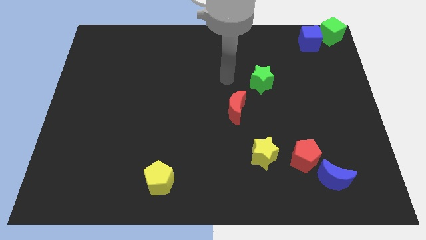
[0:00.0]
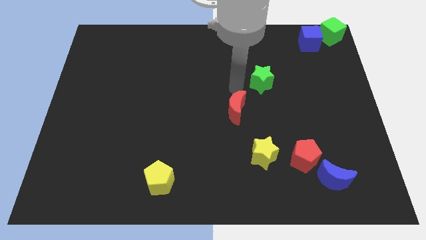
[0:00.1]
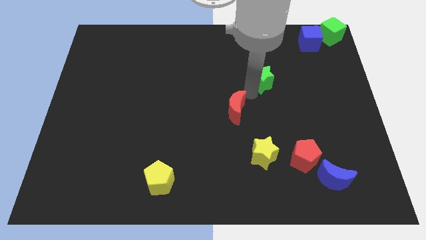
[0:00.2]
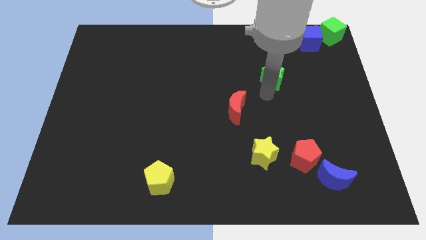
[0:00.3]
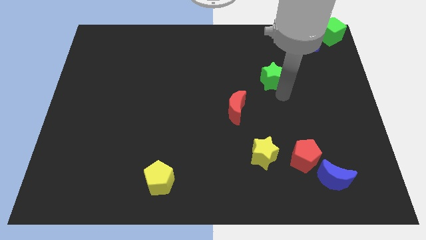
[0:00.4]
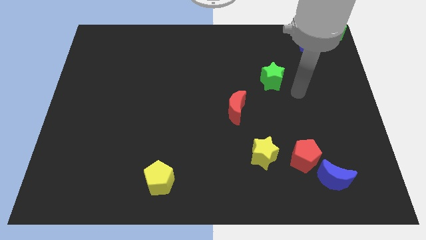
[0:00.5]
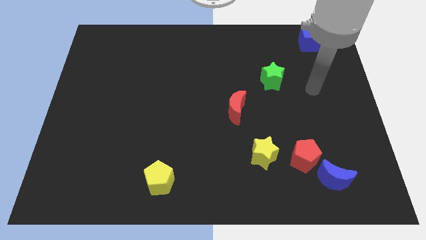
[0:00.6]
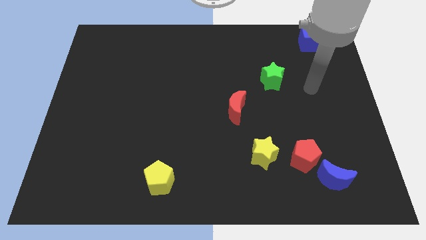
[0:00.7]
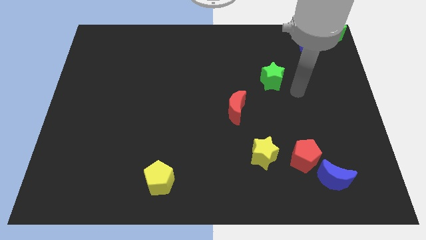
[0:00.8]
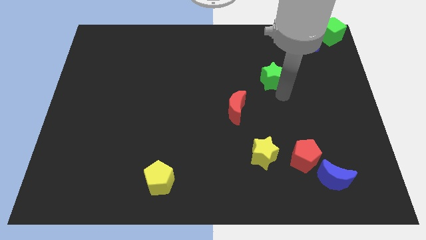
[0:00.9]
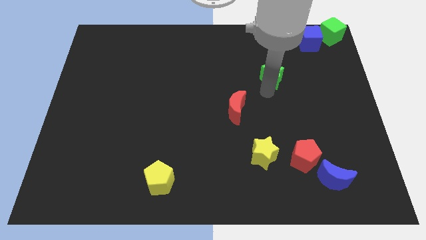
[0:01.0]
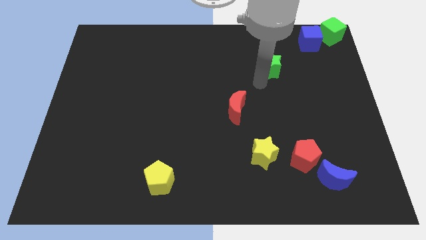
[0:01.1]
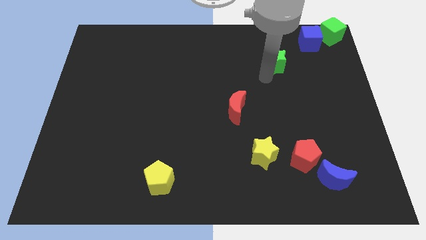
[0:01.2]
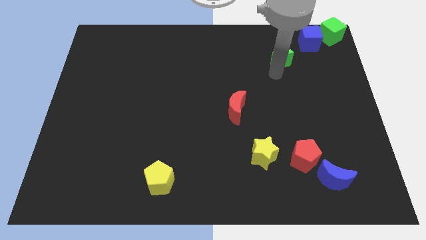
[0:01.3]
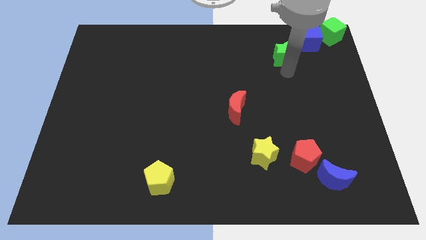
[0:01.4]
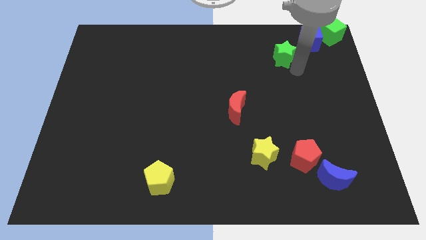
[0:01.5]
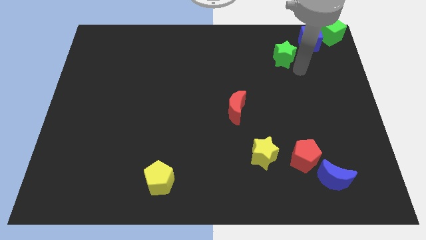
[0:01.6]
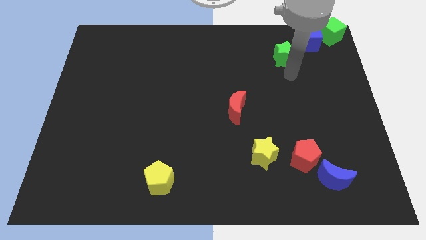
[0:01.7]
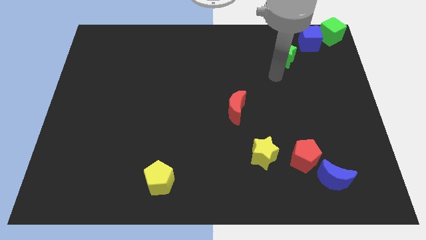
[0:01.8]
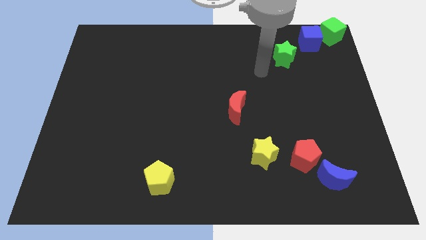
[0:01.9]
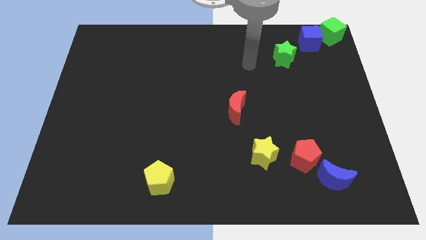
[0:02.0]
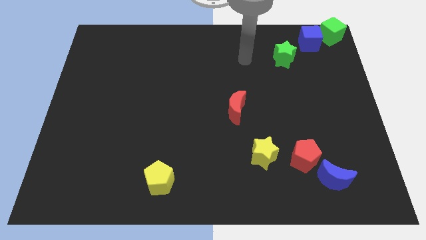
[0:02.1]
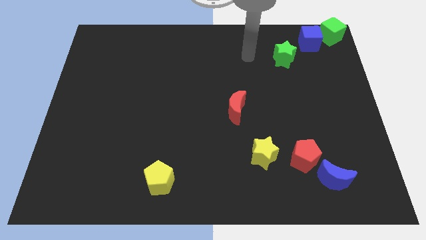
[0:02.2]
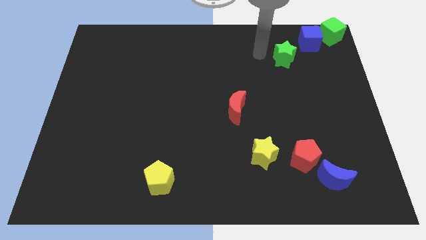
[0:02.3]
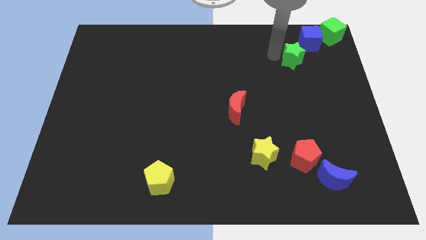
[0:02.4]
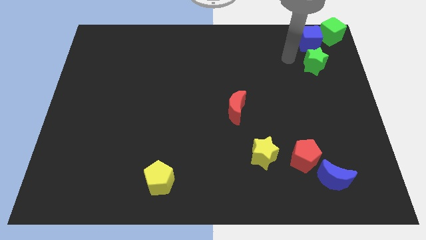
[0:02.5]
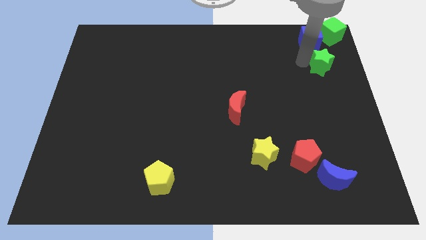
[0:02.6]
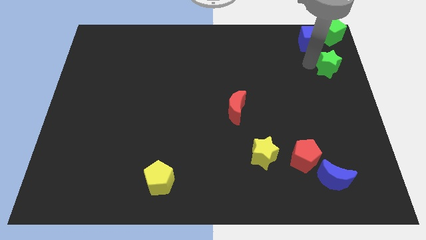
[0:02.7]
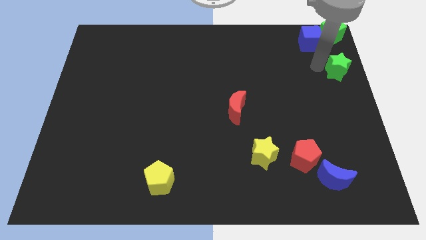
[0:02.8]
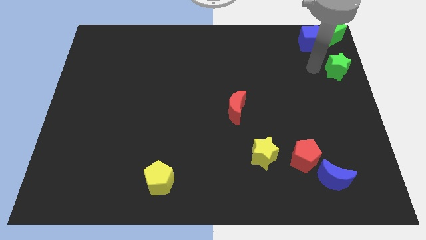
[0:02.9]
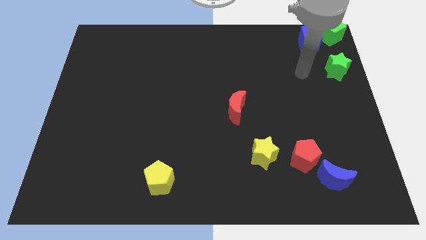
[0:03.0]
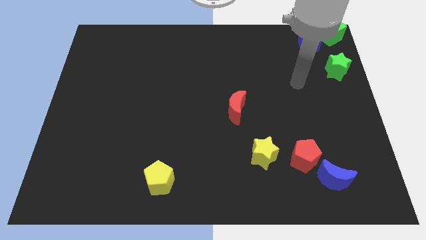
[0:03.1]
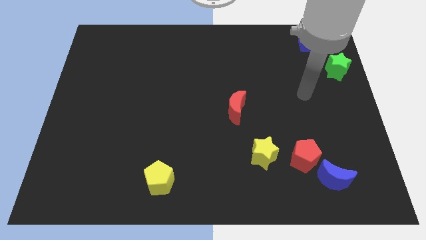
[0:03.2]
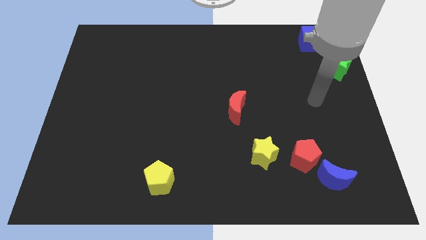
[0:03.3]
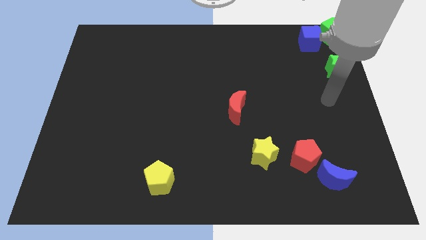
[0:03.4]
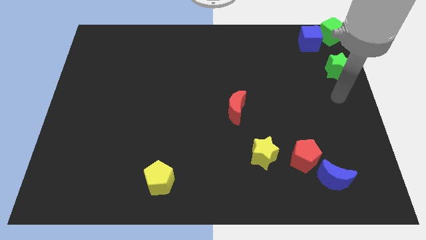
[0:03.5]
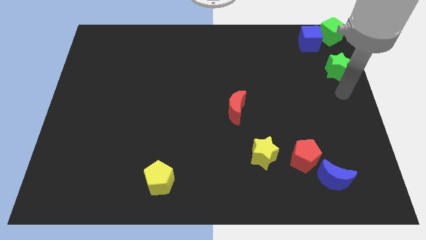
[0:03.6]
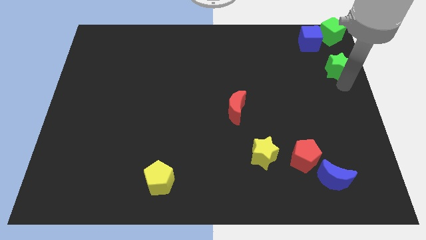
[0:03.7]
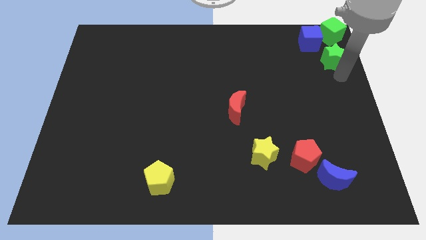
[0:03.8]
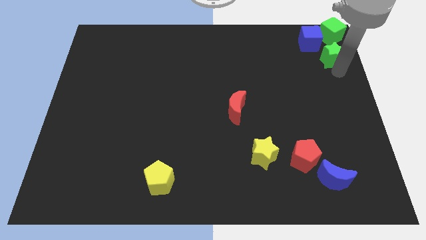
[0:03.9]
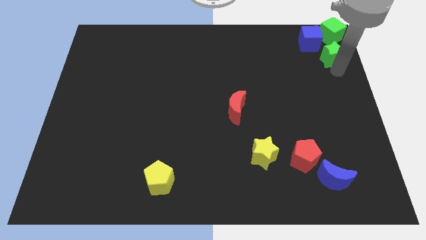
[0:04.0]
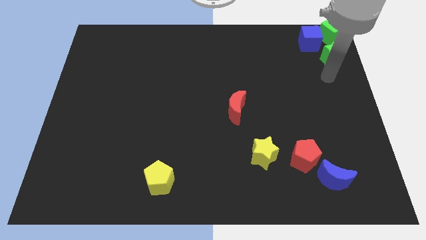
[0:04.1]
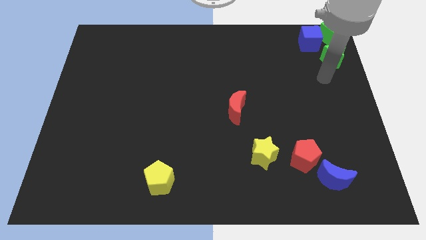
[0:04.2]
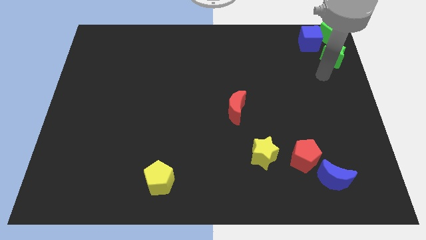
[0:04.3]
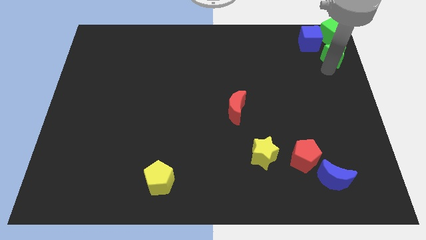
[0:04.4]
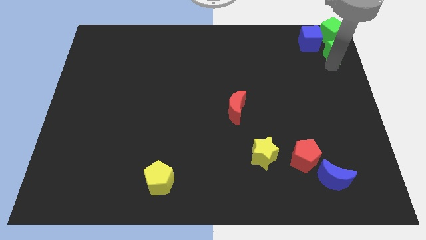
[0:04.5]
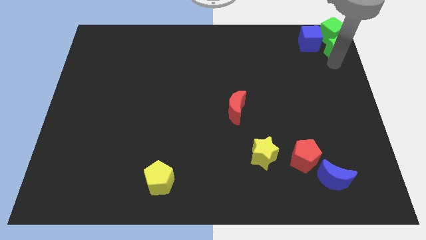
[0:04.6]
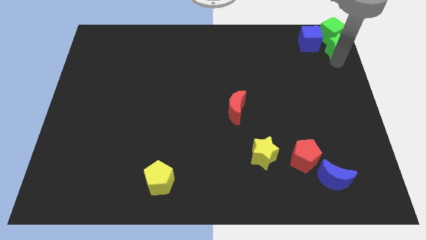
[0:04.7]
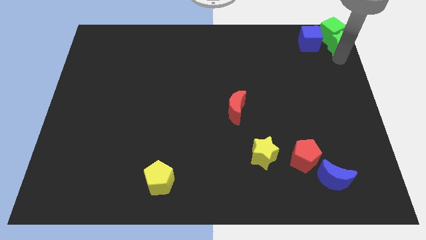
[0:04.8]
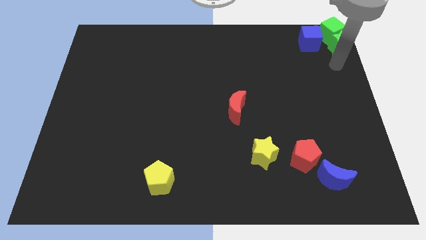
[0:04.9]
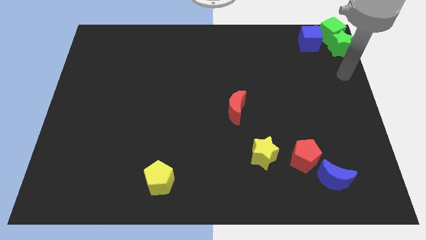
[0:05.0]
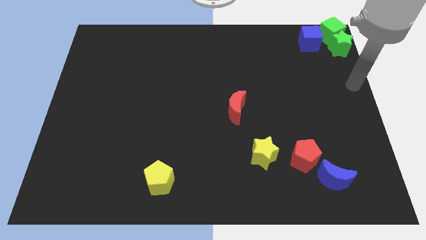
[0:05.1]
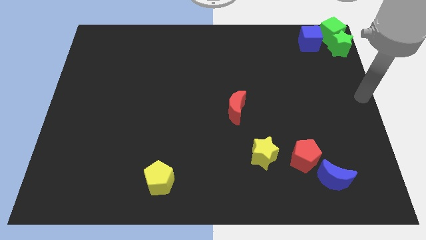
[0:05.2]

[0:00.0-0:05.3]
move the green star to the bottom of the green cube

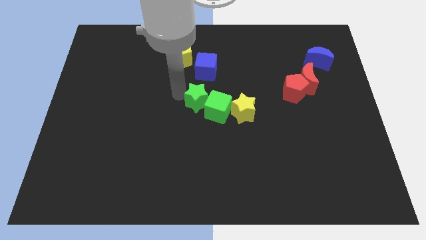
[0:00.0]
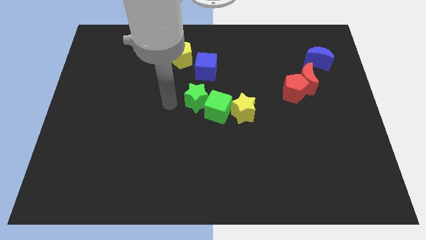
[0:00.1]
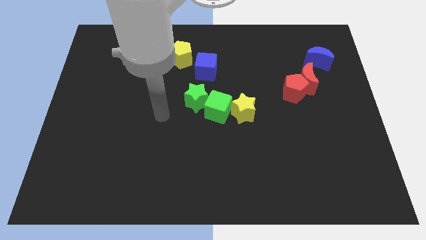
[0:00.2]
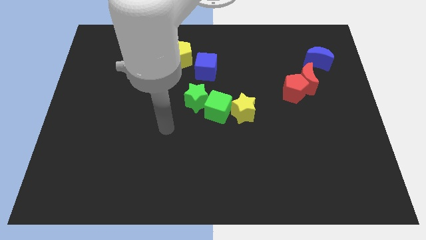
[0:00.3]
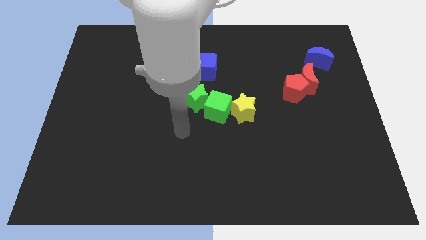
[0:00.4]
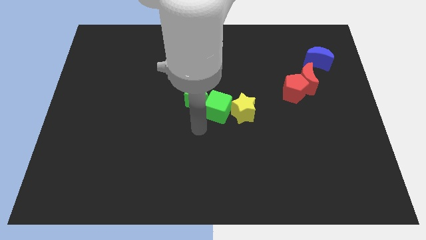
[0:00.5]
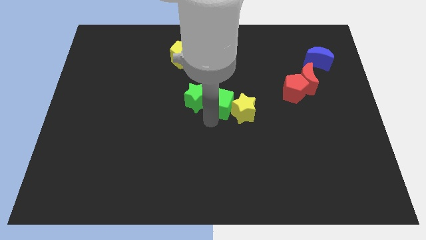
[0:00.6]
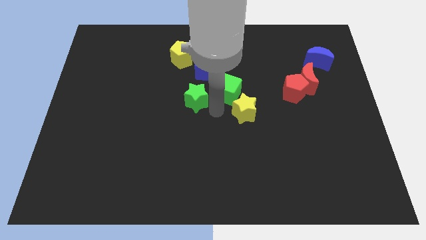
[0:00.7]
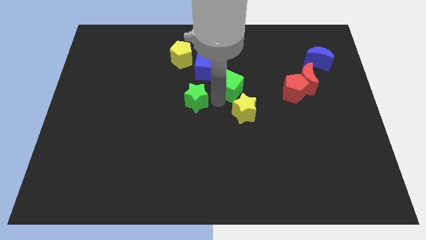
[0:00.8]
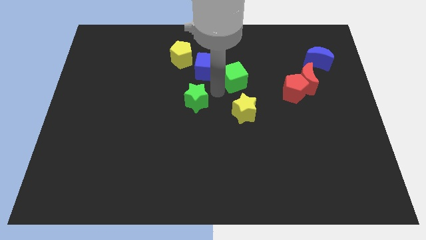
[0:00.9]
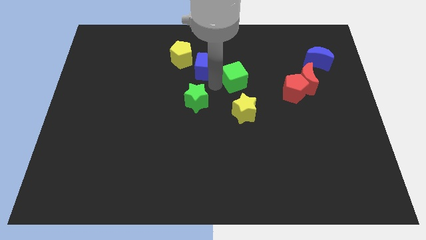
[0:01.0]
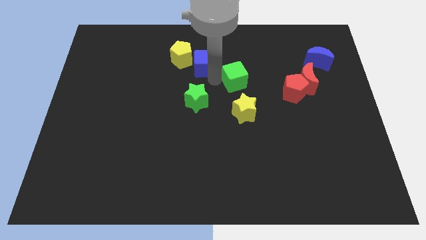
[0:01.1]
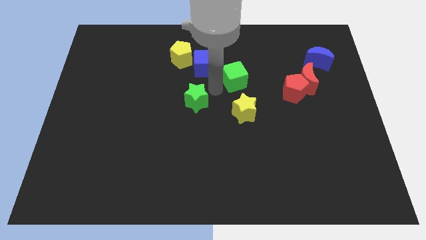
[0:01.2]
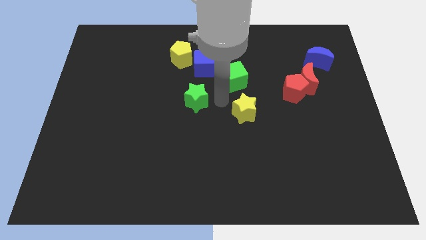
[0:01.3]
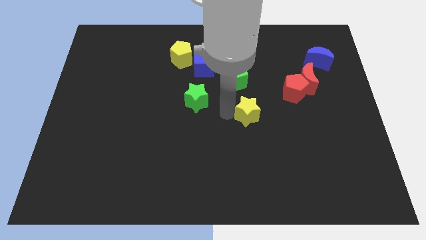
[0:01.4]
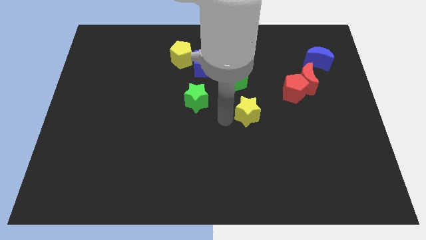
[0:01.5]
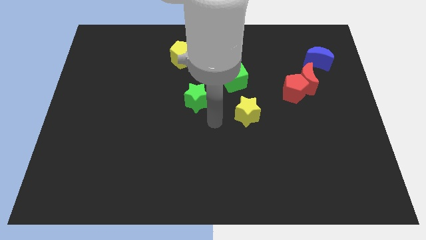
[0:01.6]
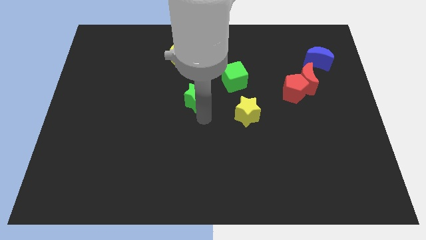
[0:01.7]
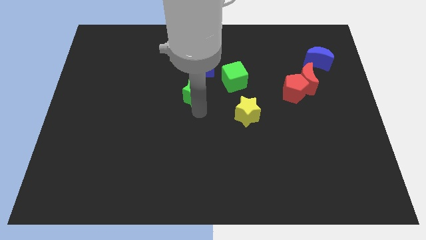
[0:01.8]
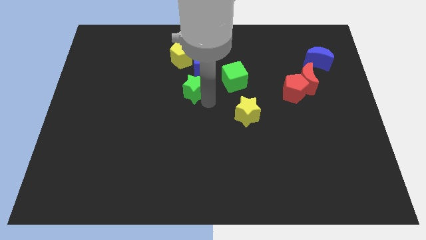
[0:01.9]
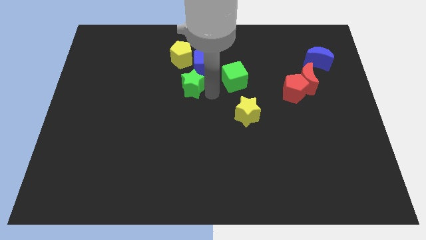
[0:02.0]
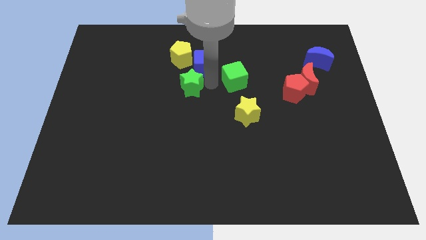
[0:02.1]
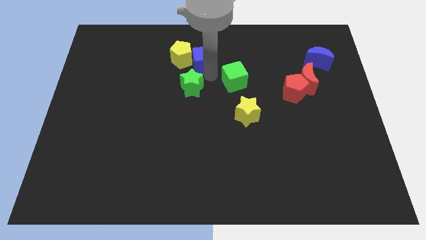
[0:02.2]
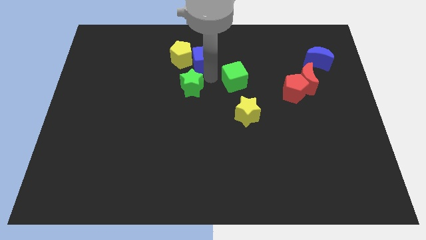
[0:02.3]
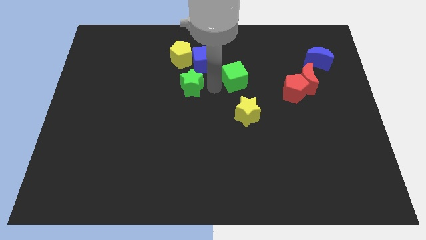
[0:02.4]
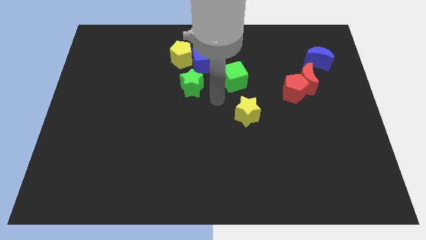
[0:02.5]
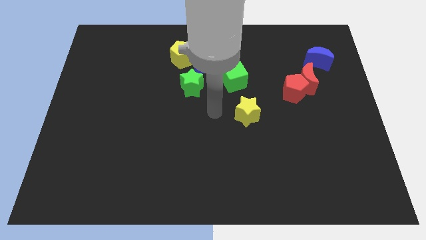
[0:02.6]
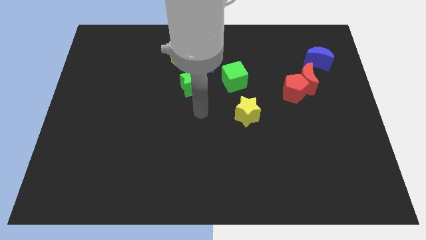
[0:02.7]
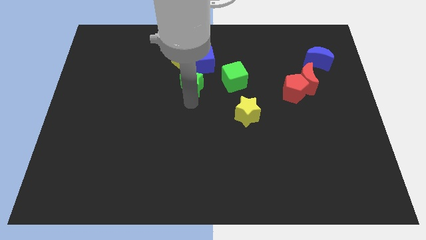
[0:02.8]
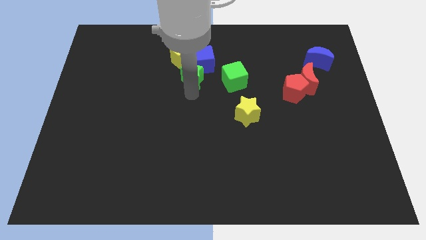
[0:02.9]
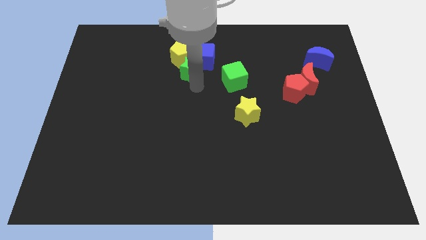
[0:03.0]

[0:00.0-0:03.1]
separate yellow star and green blocks at the center

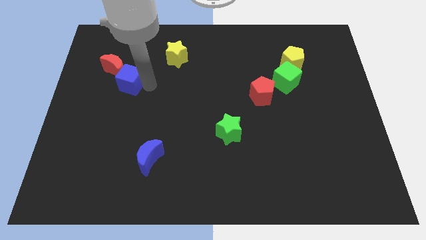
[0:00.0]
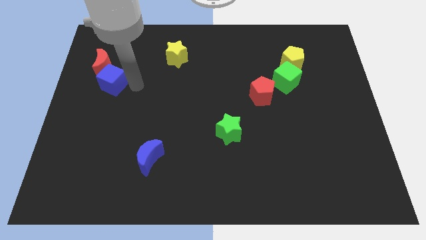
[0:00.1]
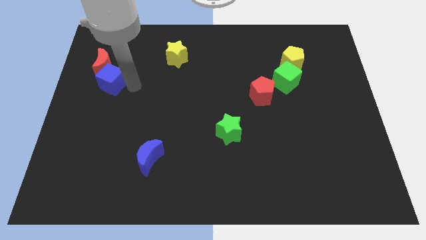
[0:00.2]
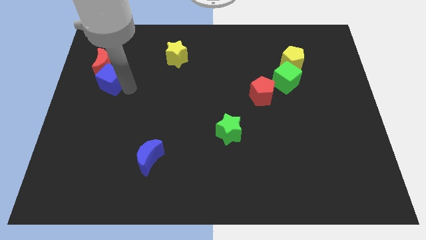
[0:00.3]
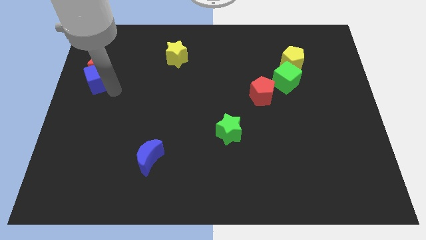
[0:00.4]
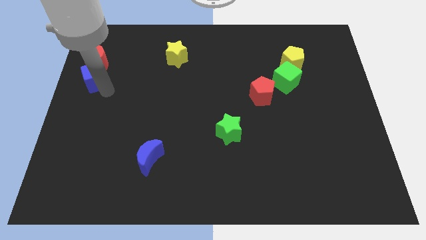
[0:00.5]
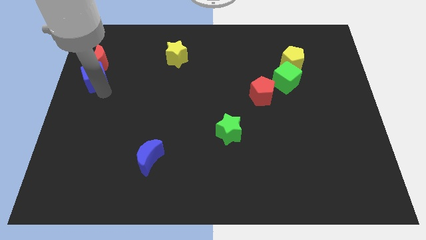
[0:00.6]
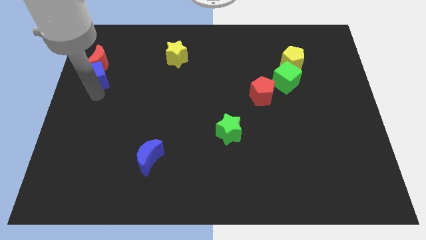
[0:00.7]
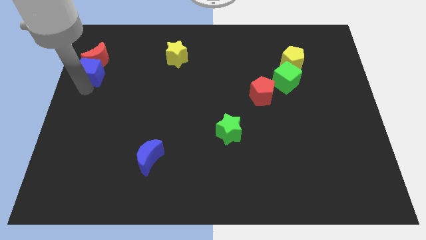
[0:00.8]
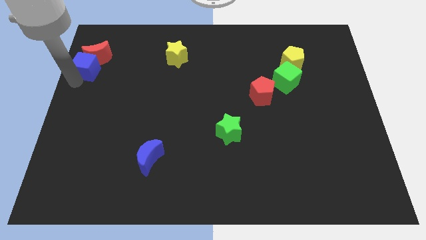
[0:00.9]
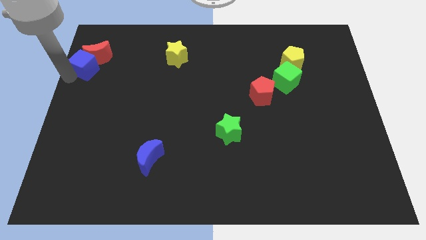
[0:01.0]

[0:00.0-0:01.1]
push the blue cube along with the red moon to the top left
